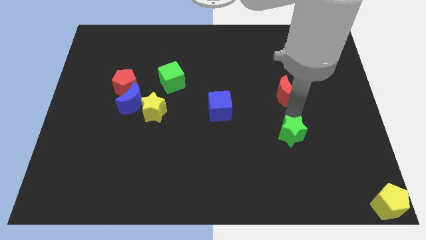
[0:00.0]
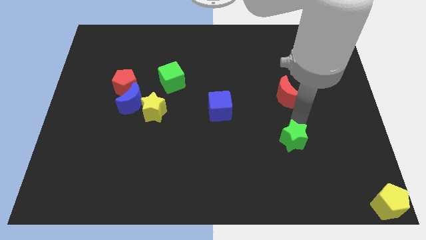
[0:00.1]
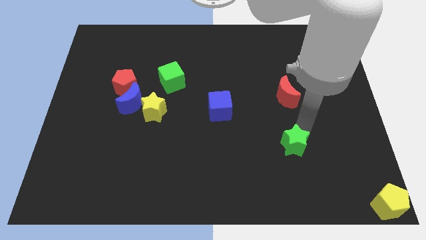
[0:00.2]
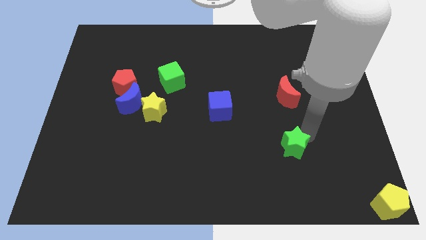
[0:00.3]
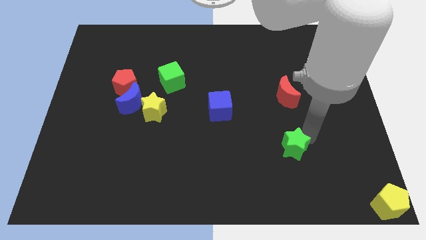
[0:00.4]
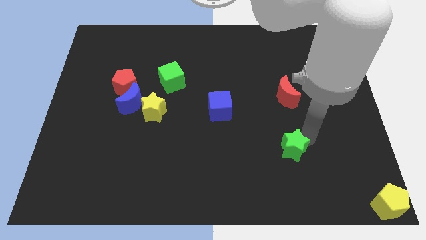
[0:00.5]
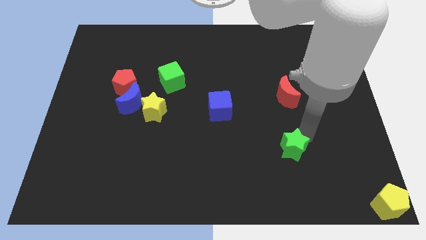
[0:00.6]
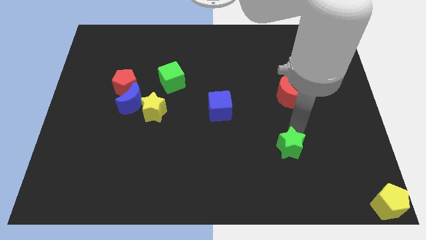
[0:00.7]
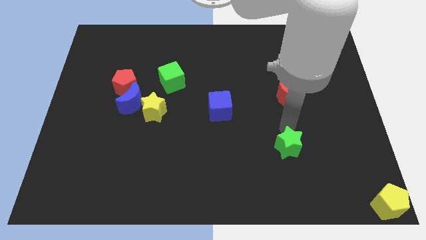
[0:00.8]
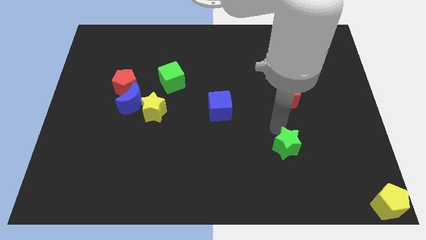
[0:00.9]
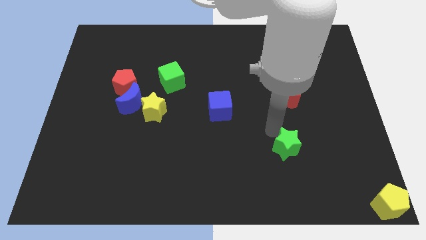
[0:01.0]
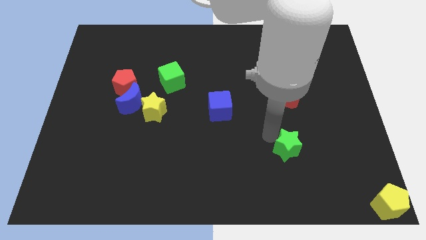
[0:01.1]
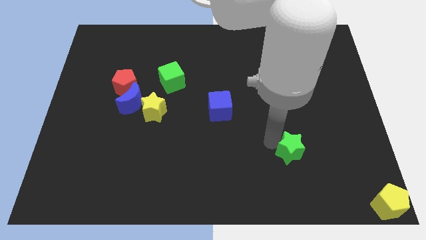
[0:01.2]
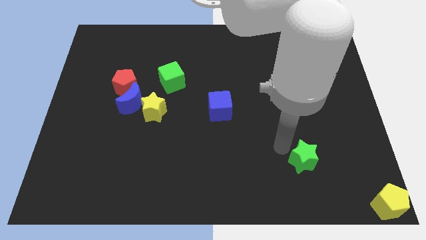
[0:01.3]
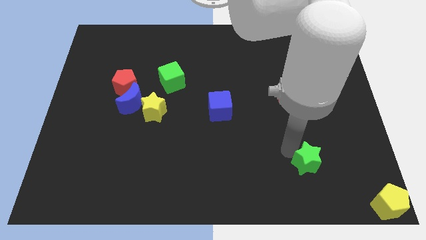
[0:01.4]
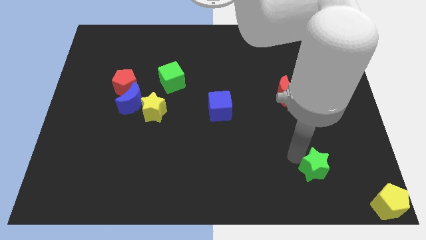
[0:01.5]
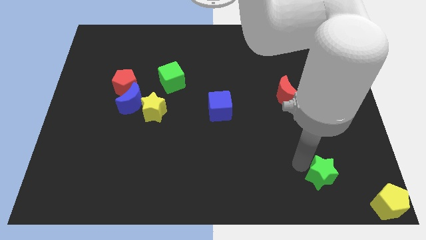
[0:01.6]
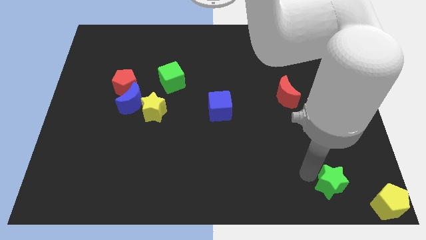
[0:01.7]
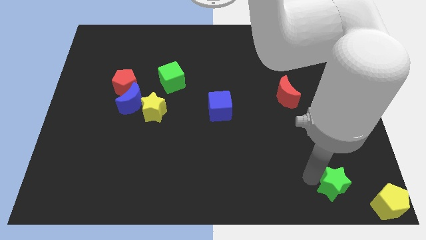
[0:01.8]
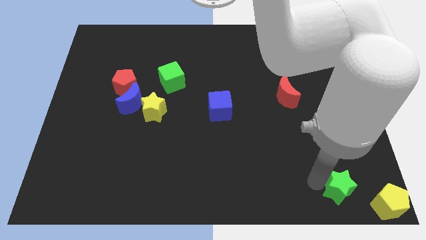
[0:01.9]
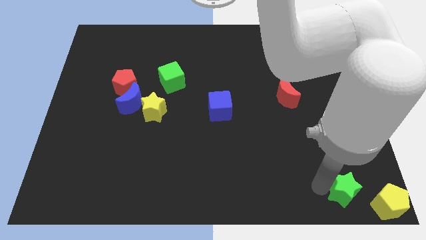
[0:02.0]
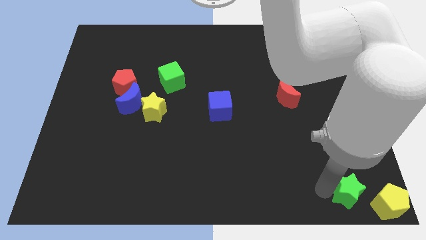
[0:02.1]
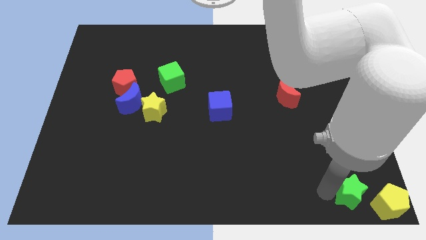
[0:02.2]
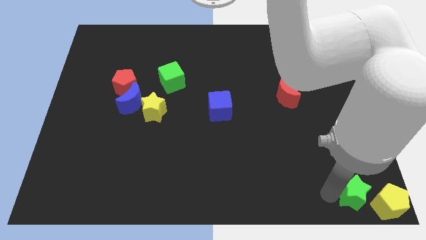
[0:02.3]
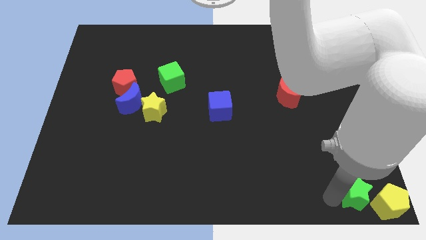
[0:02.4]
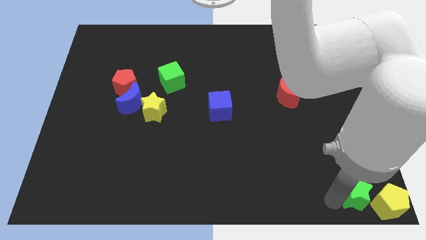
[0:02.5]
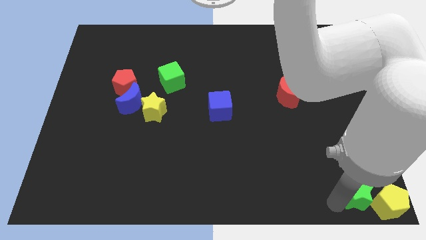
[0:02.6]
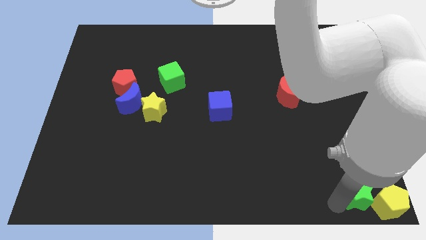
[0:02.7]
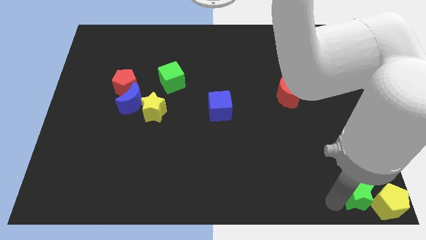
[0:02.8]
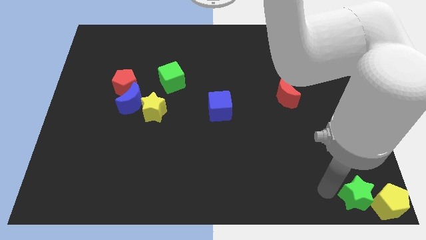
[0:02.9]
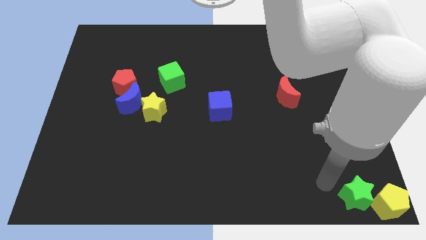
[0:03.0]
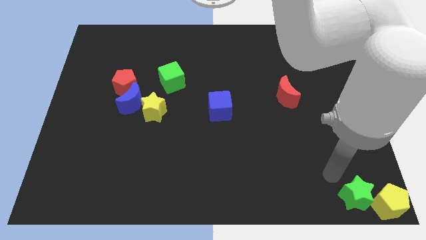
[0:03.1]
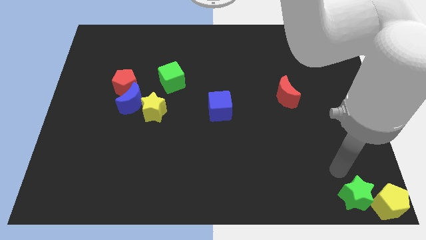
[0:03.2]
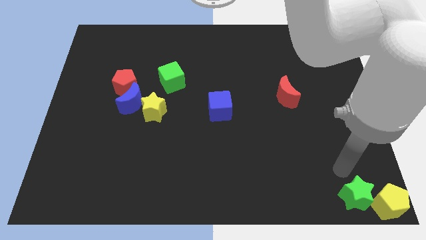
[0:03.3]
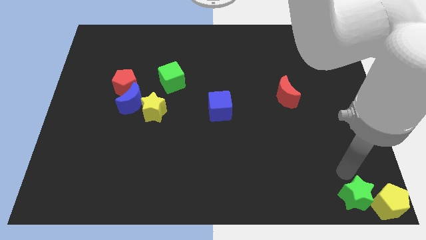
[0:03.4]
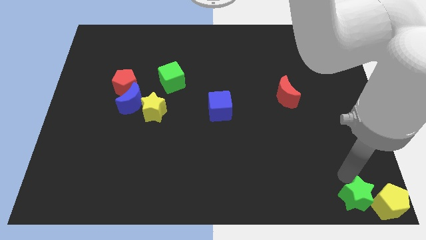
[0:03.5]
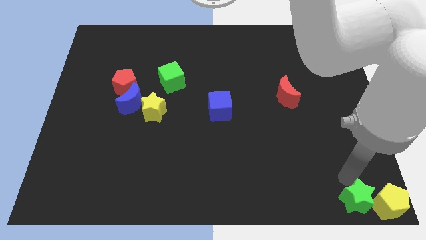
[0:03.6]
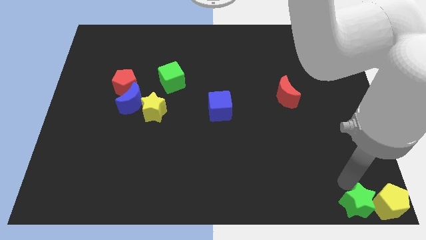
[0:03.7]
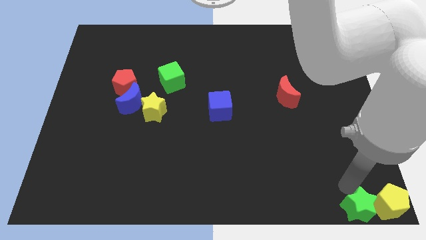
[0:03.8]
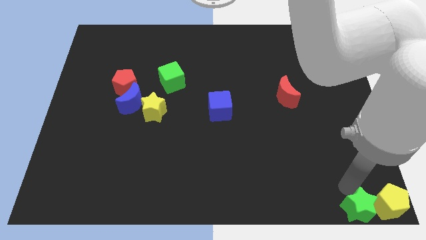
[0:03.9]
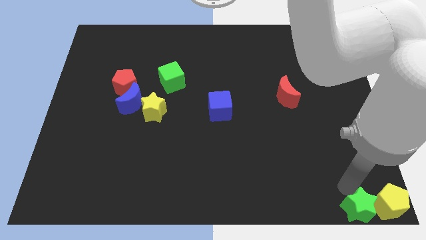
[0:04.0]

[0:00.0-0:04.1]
move the green star to the left of the yellow pentagon

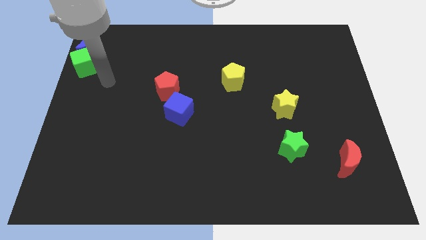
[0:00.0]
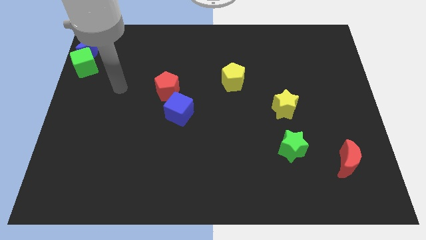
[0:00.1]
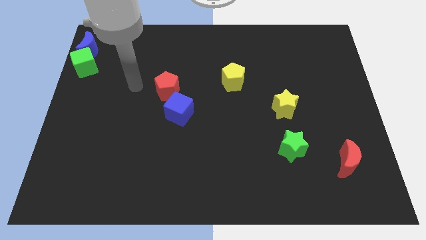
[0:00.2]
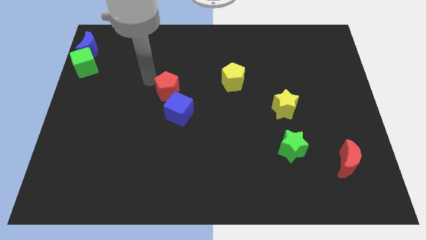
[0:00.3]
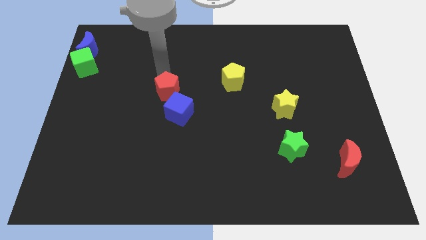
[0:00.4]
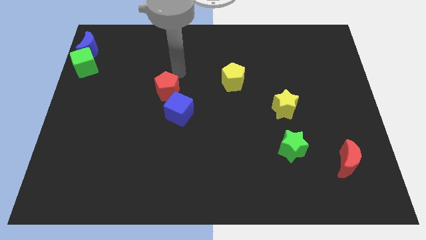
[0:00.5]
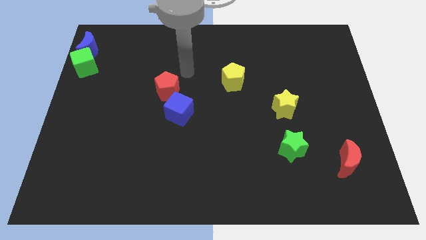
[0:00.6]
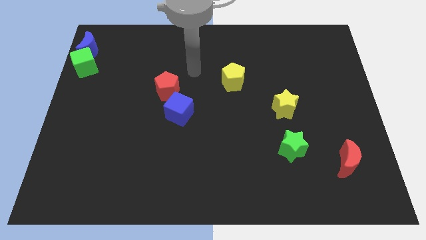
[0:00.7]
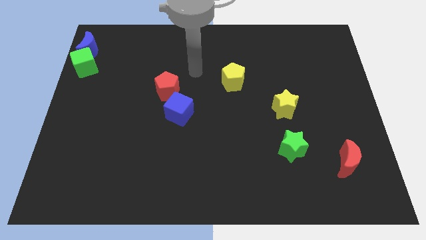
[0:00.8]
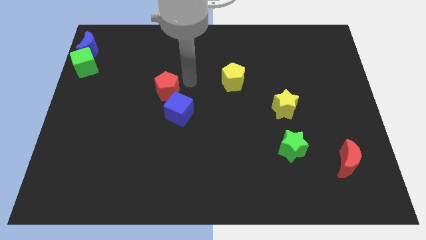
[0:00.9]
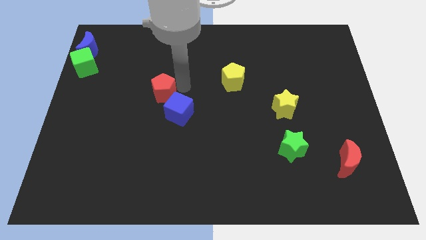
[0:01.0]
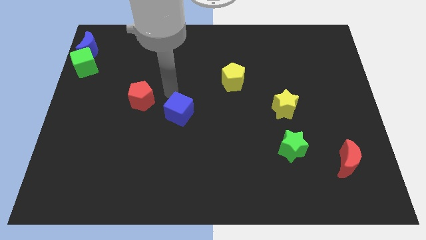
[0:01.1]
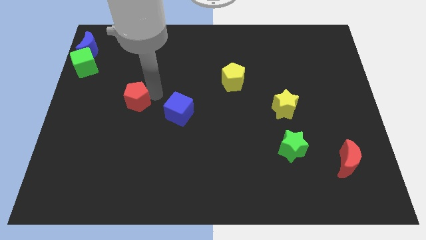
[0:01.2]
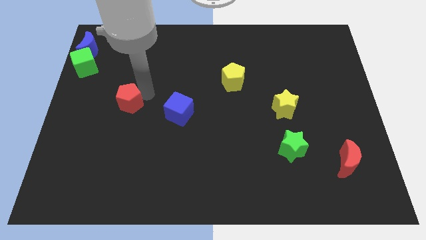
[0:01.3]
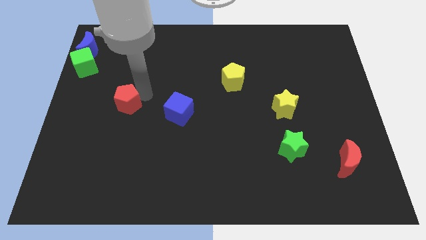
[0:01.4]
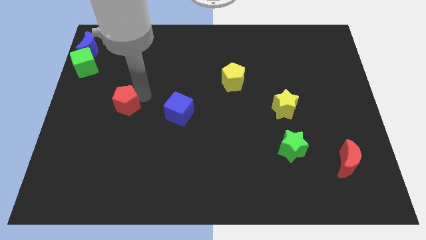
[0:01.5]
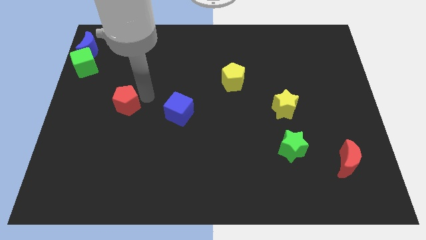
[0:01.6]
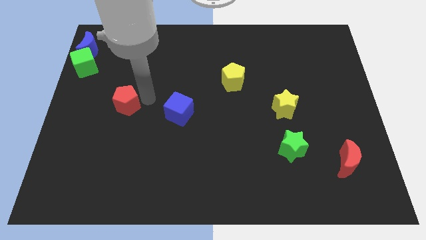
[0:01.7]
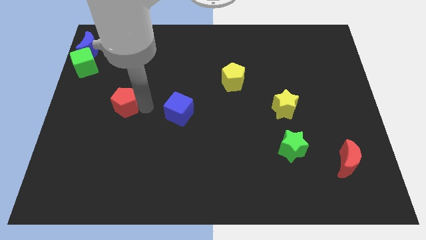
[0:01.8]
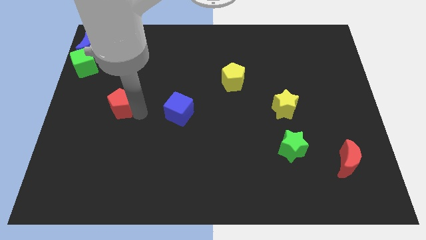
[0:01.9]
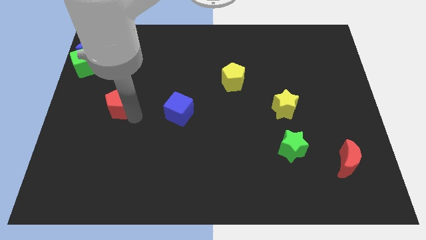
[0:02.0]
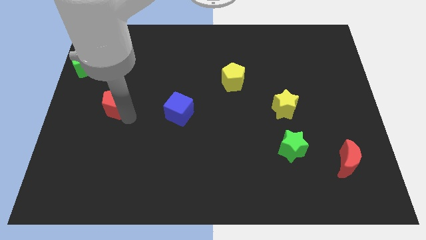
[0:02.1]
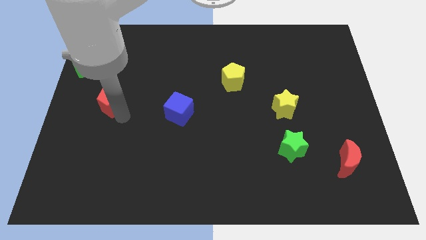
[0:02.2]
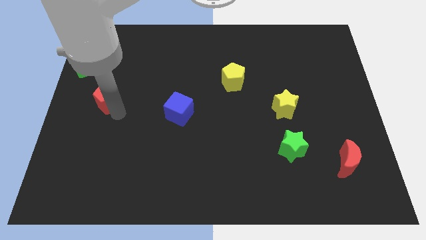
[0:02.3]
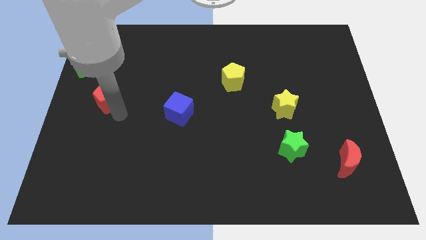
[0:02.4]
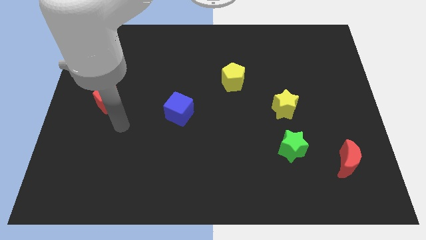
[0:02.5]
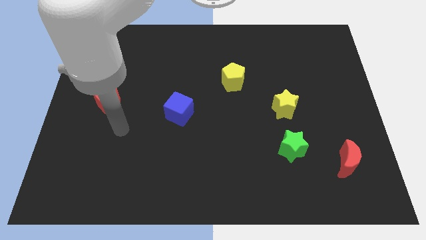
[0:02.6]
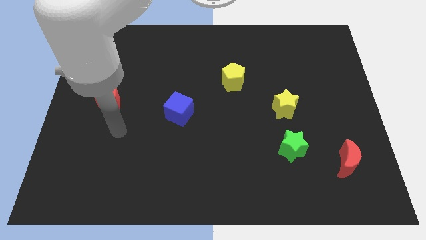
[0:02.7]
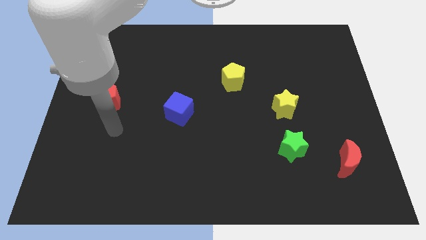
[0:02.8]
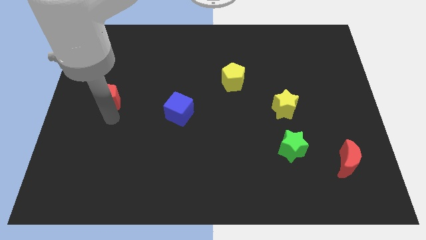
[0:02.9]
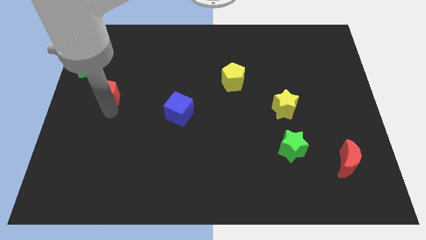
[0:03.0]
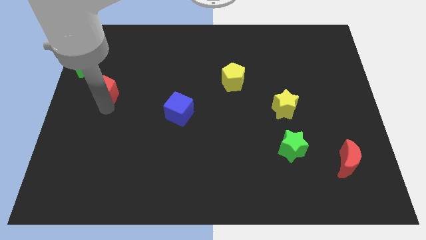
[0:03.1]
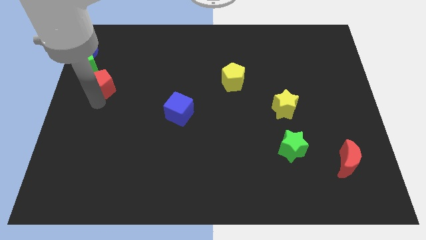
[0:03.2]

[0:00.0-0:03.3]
push the red pentagon to the bottom right of the green cube

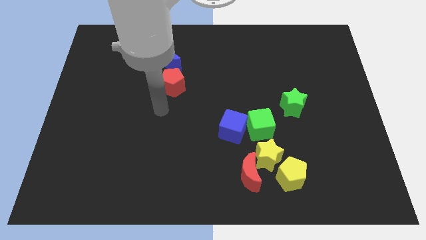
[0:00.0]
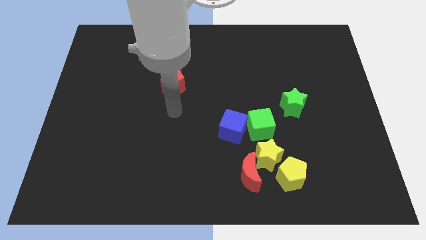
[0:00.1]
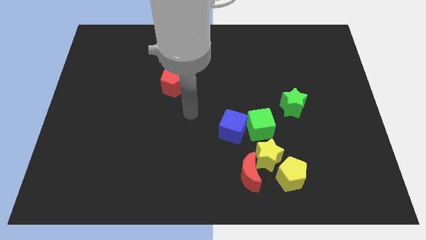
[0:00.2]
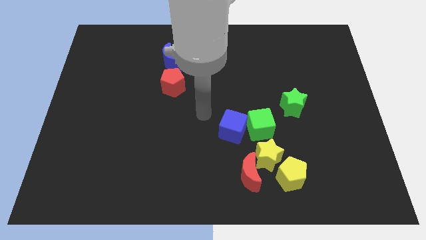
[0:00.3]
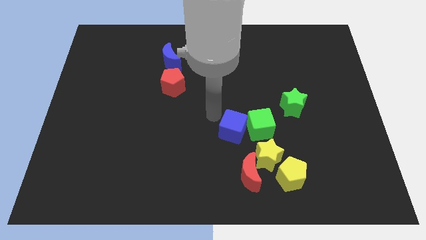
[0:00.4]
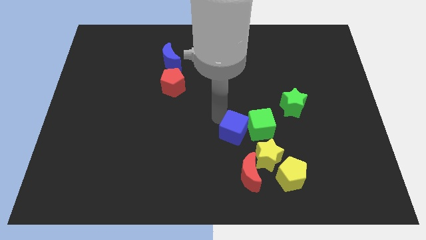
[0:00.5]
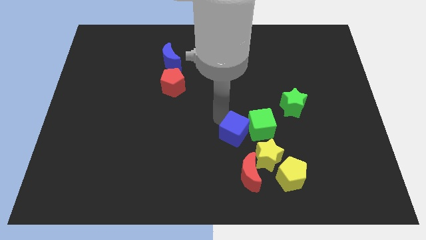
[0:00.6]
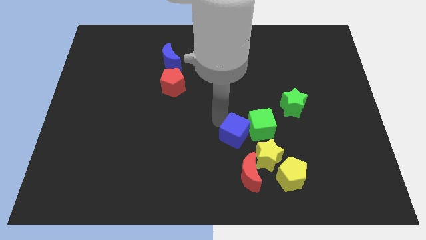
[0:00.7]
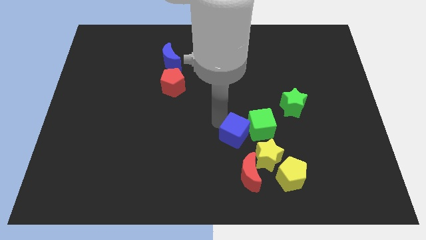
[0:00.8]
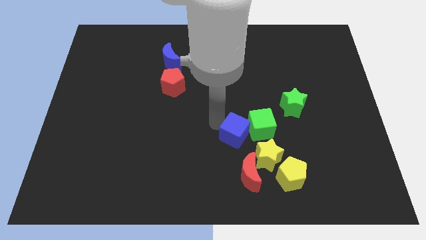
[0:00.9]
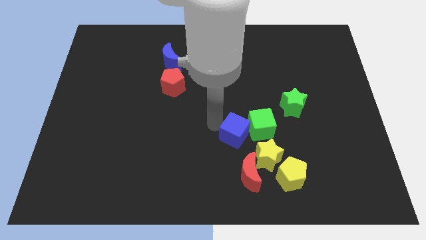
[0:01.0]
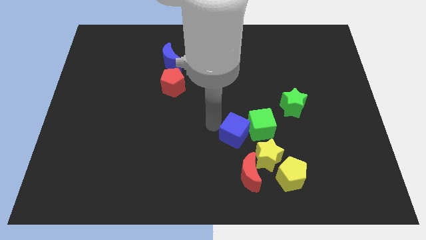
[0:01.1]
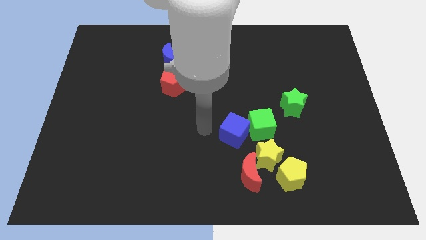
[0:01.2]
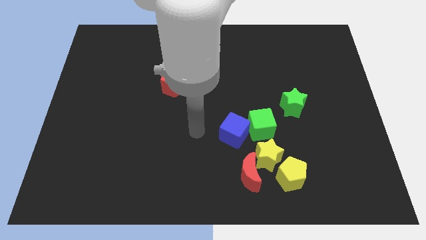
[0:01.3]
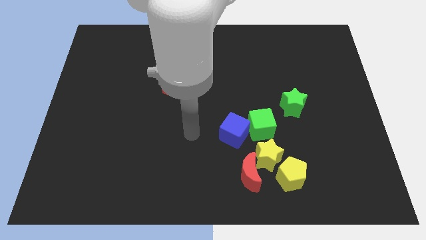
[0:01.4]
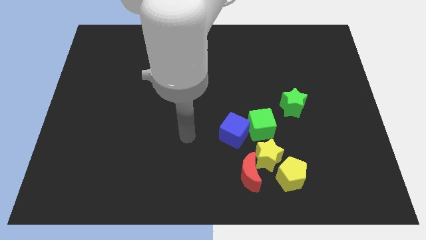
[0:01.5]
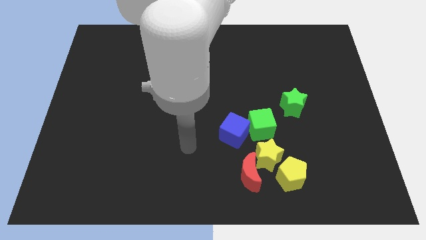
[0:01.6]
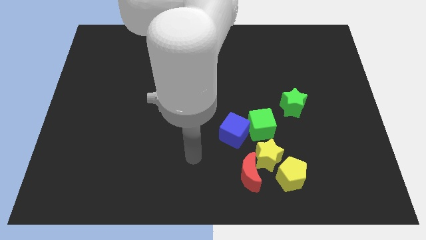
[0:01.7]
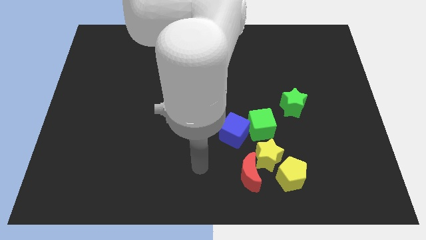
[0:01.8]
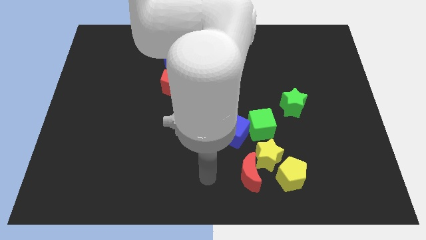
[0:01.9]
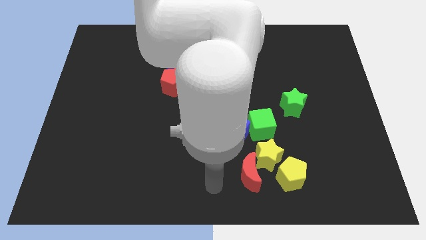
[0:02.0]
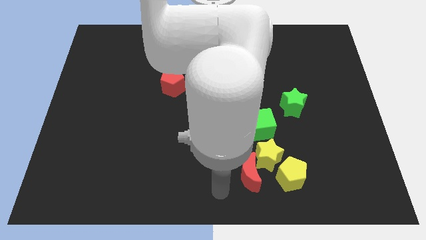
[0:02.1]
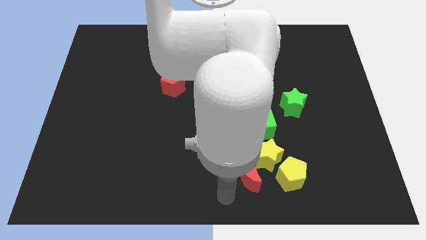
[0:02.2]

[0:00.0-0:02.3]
slide the blue cube slightly down
